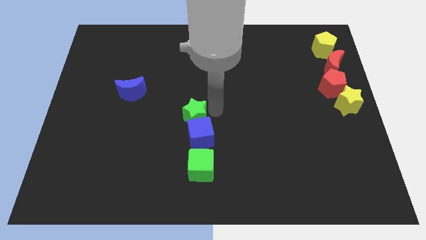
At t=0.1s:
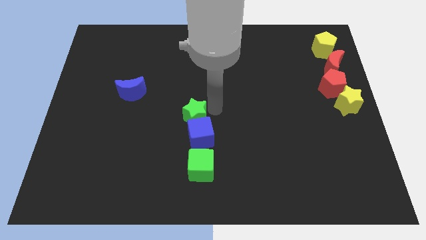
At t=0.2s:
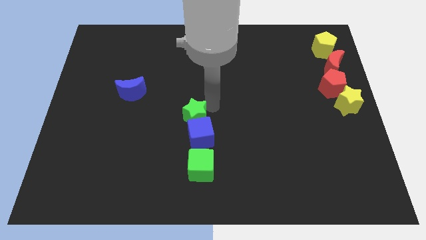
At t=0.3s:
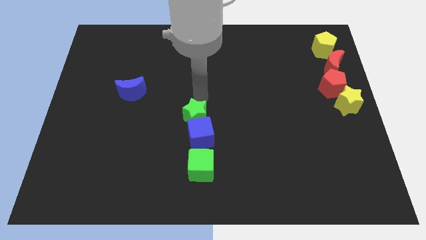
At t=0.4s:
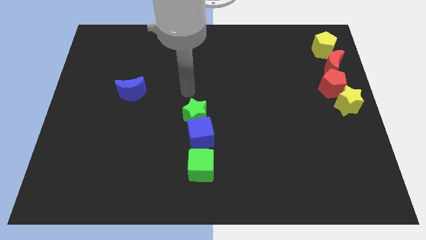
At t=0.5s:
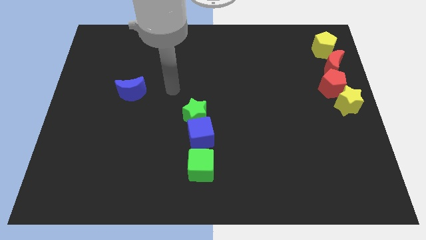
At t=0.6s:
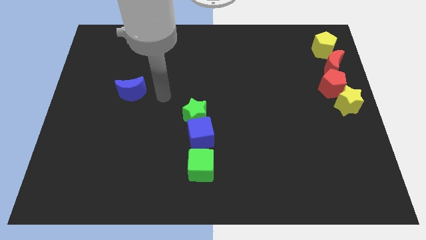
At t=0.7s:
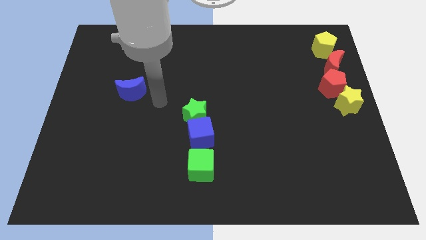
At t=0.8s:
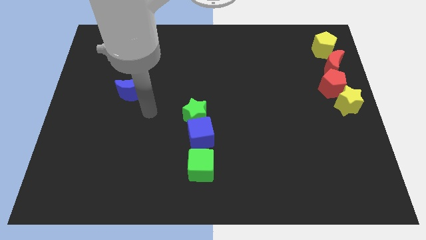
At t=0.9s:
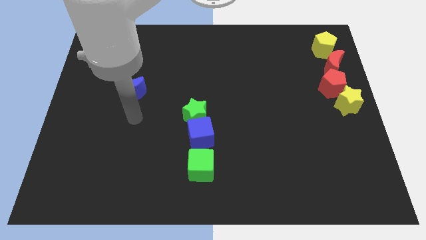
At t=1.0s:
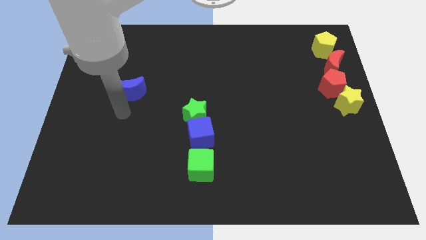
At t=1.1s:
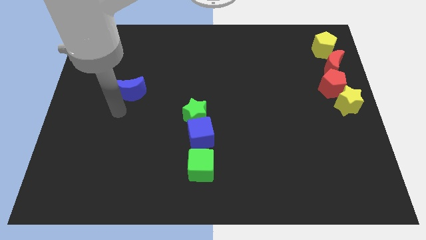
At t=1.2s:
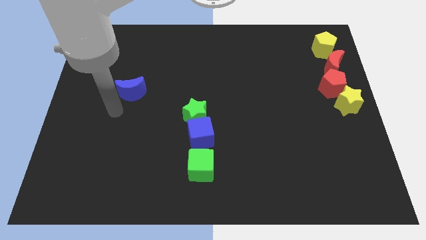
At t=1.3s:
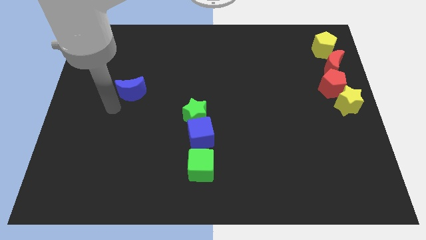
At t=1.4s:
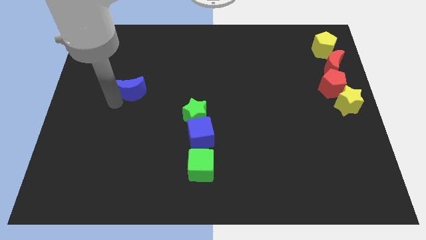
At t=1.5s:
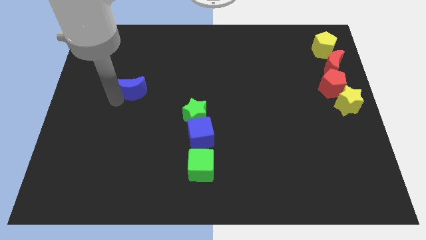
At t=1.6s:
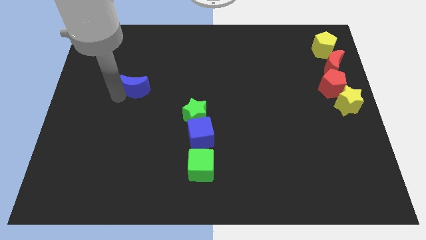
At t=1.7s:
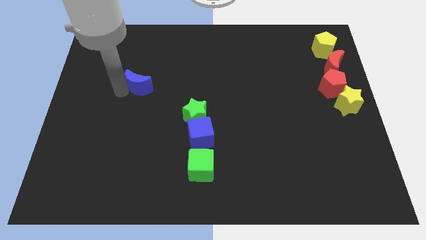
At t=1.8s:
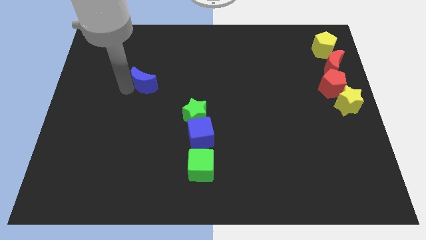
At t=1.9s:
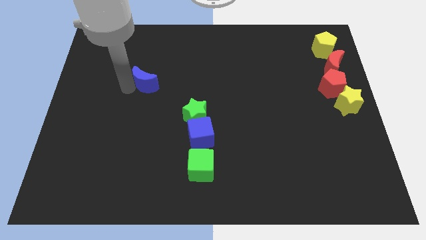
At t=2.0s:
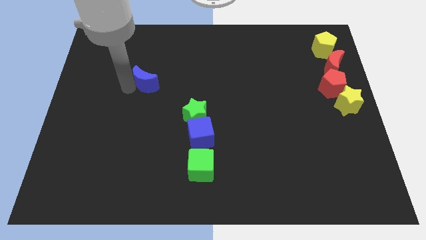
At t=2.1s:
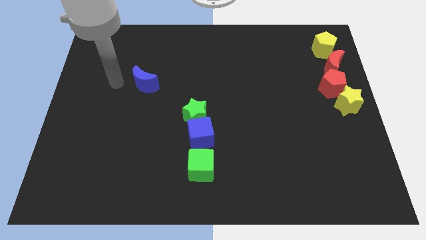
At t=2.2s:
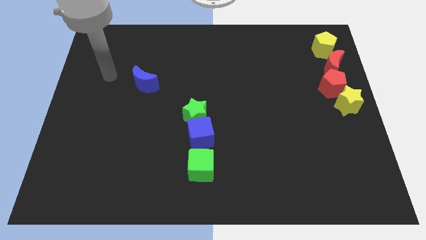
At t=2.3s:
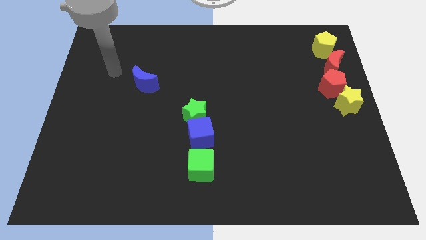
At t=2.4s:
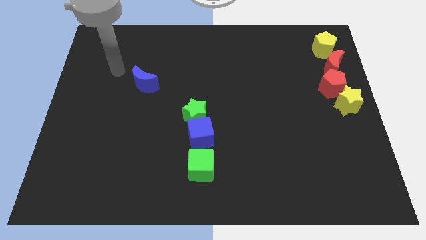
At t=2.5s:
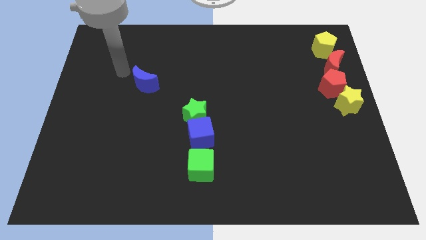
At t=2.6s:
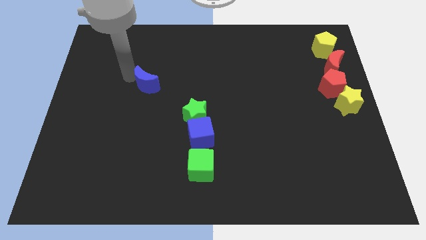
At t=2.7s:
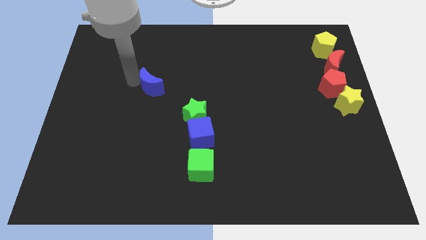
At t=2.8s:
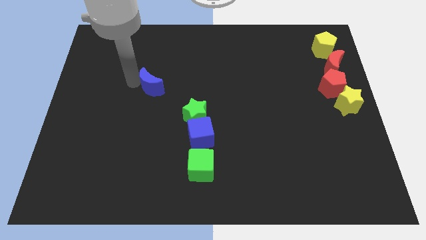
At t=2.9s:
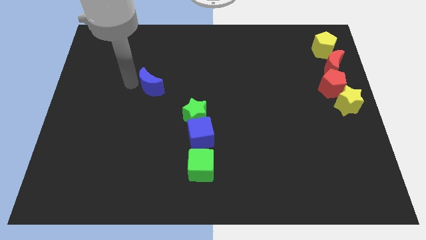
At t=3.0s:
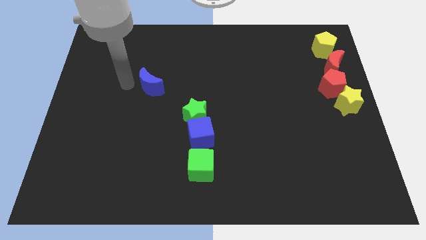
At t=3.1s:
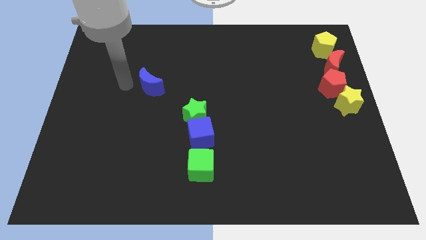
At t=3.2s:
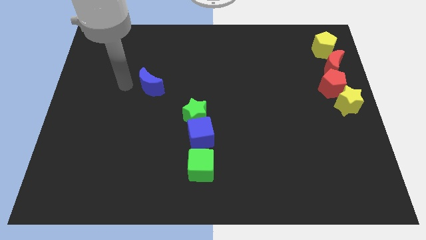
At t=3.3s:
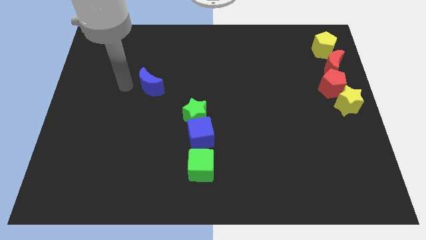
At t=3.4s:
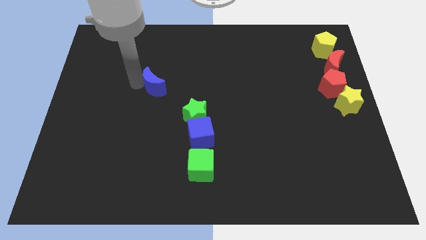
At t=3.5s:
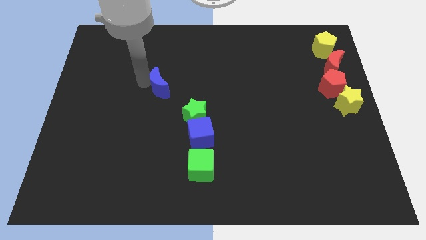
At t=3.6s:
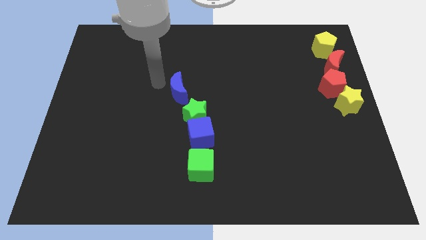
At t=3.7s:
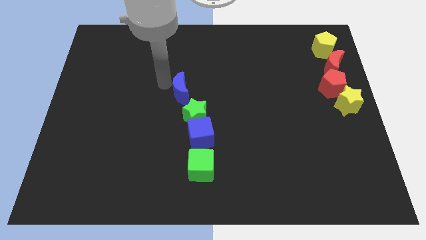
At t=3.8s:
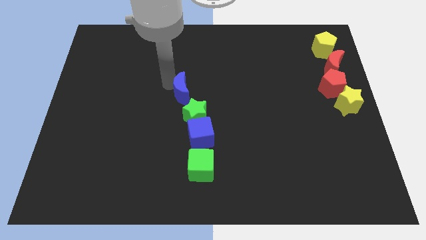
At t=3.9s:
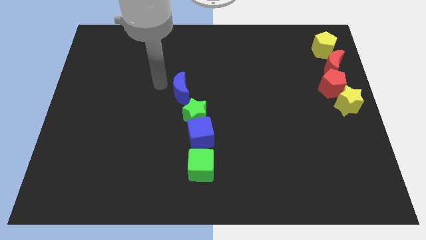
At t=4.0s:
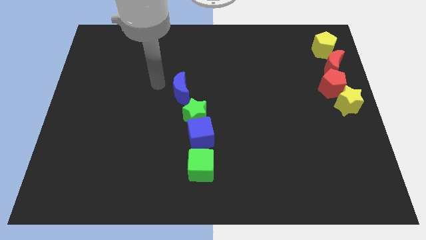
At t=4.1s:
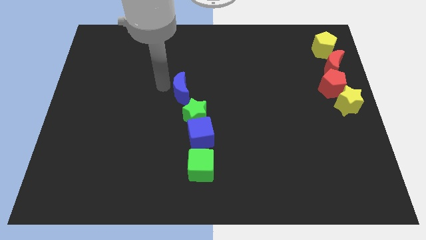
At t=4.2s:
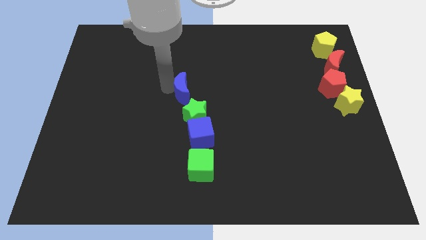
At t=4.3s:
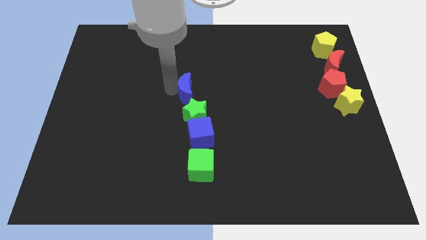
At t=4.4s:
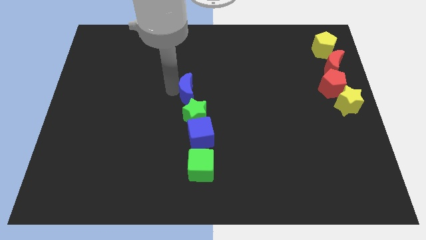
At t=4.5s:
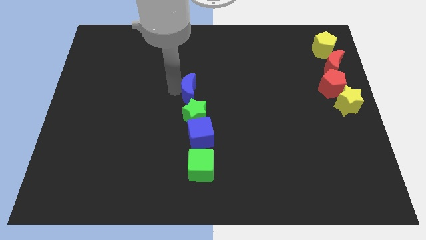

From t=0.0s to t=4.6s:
place blue moon above the green star

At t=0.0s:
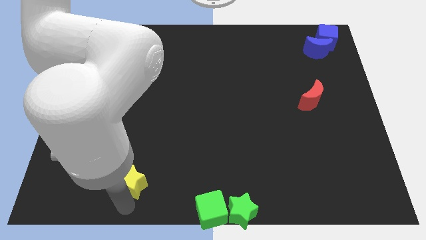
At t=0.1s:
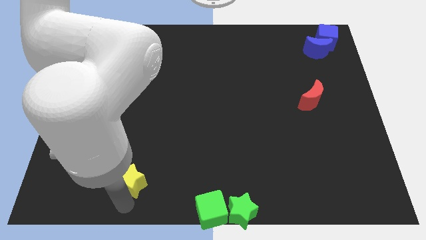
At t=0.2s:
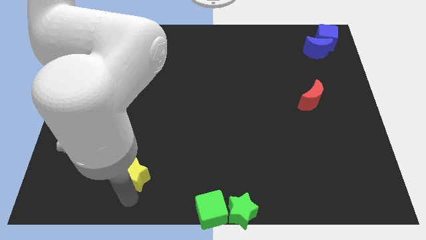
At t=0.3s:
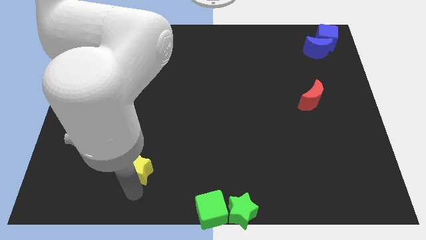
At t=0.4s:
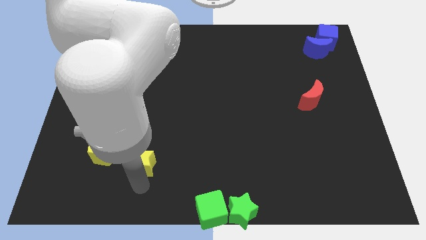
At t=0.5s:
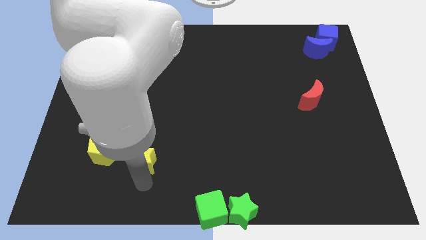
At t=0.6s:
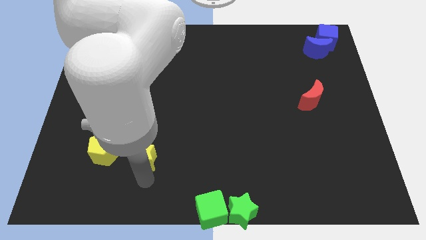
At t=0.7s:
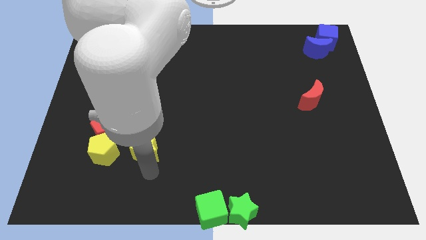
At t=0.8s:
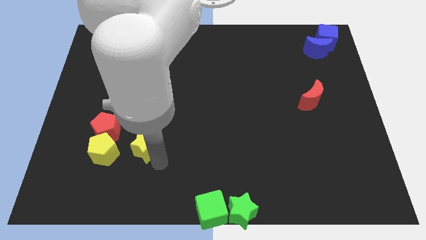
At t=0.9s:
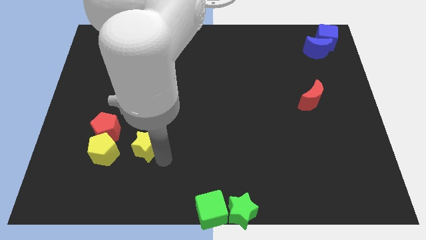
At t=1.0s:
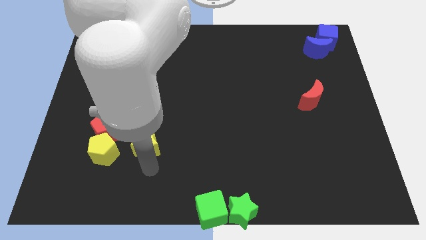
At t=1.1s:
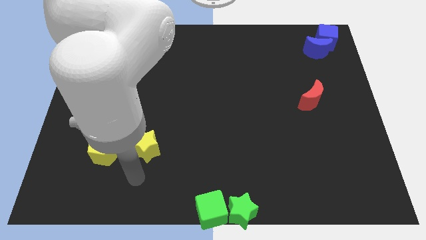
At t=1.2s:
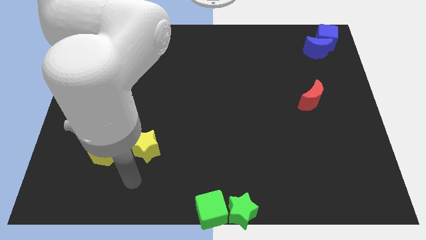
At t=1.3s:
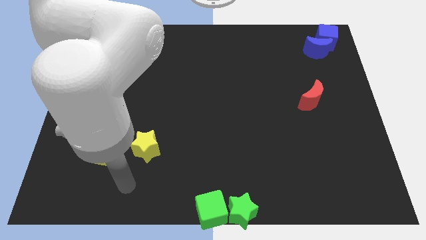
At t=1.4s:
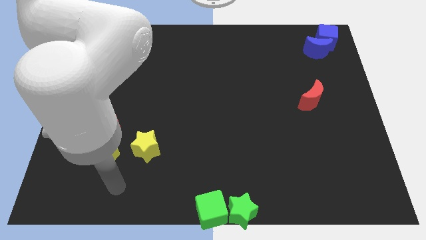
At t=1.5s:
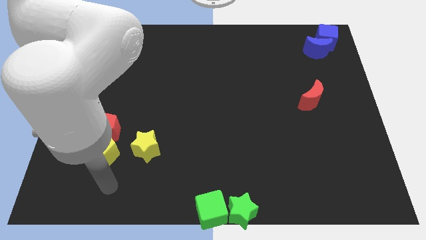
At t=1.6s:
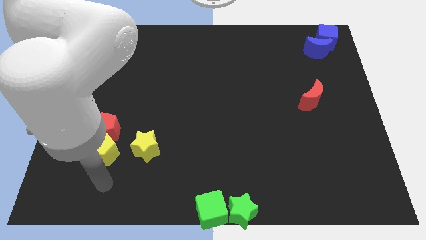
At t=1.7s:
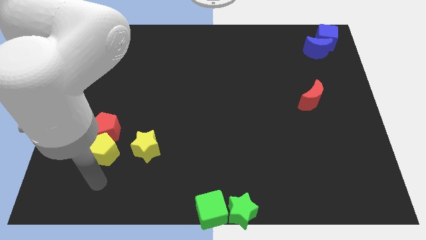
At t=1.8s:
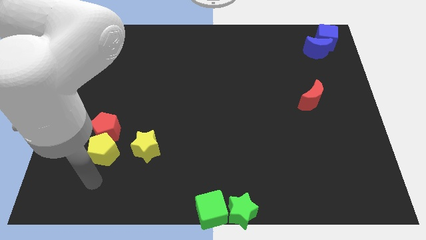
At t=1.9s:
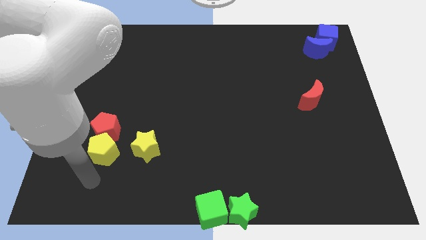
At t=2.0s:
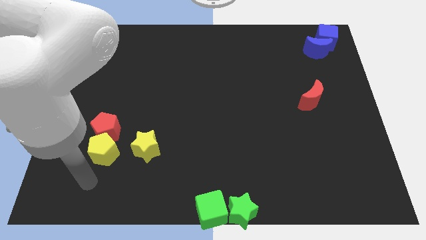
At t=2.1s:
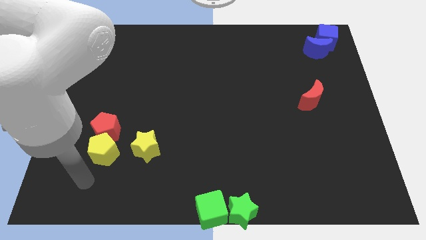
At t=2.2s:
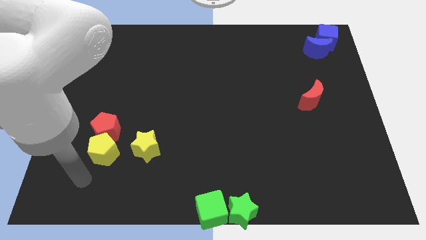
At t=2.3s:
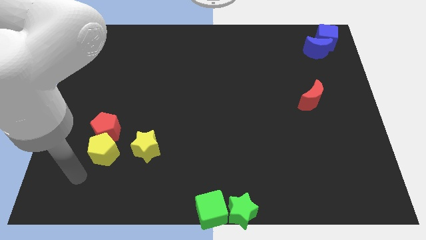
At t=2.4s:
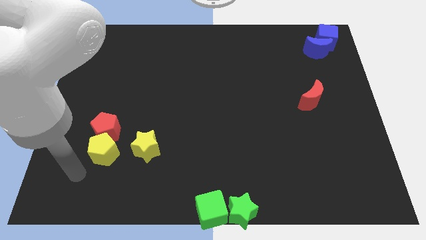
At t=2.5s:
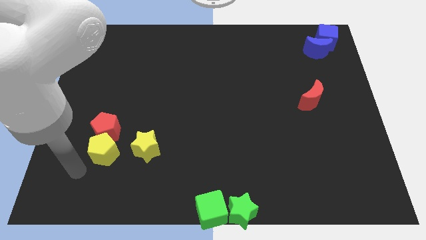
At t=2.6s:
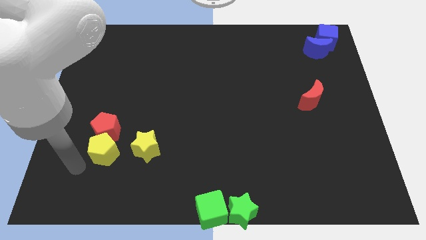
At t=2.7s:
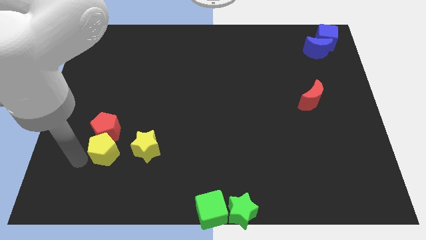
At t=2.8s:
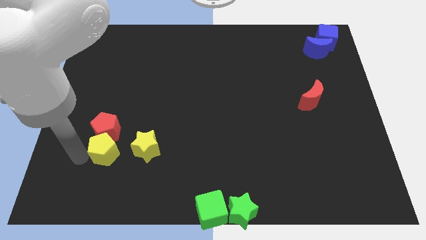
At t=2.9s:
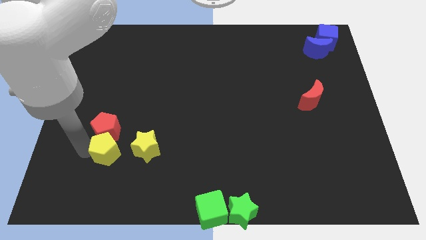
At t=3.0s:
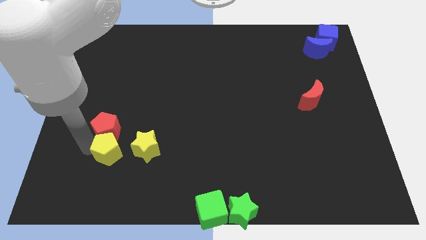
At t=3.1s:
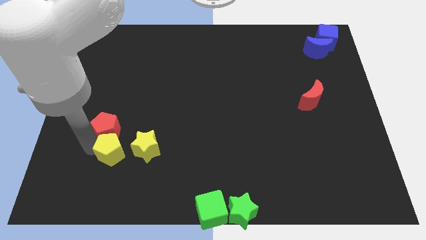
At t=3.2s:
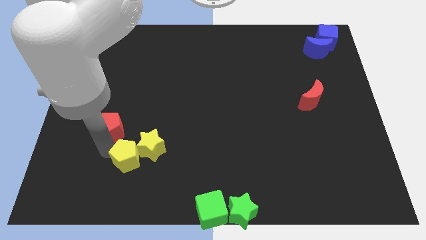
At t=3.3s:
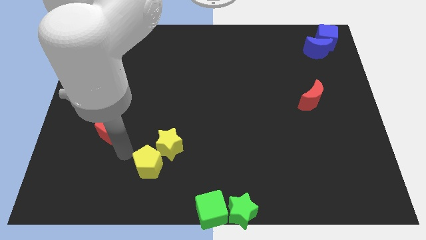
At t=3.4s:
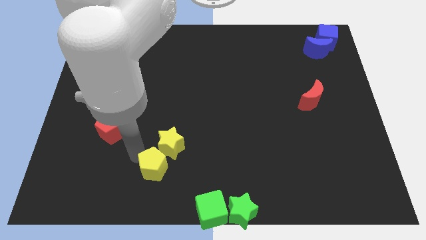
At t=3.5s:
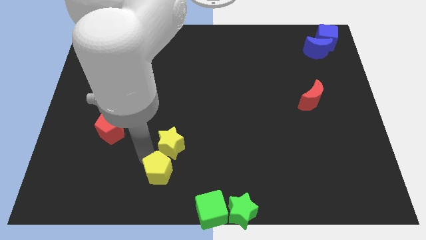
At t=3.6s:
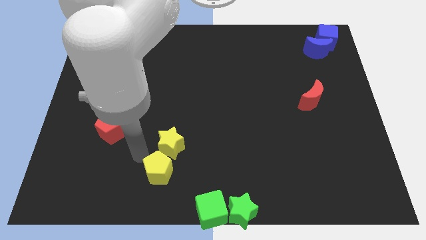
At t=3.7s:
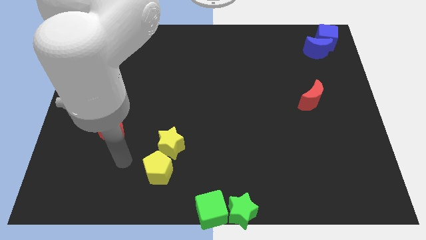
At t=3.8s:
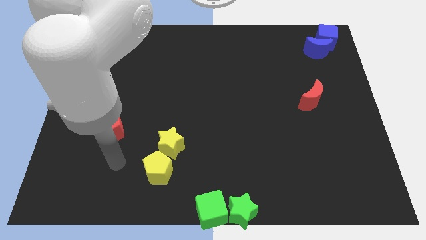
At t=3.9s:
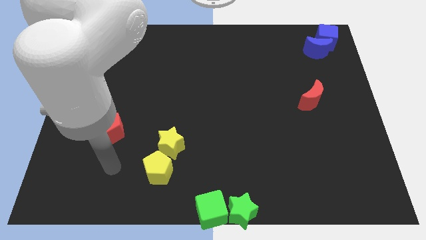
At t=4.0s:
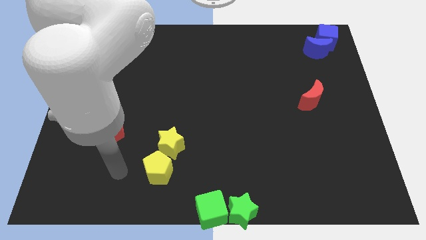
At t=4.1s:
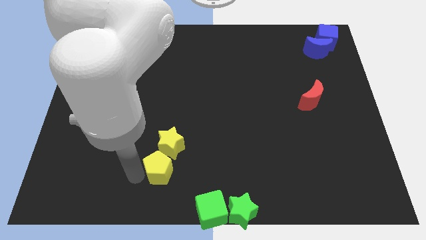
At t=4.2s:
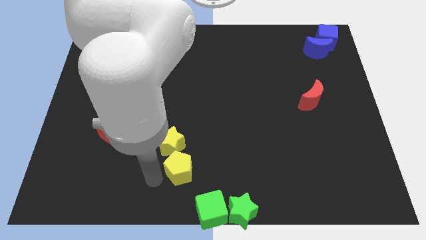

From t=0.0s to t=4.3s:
push yellow pentagon below yellow star
